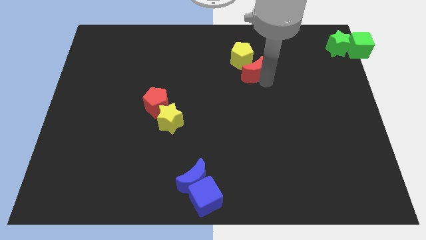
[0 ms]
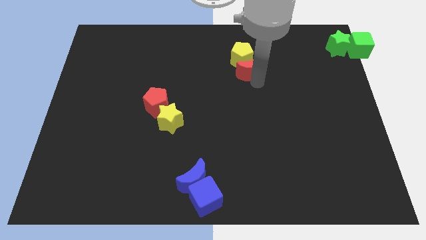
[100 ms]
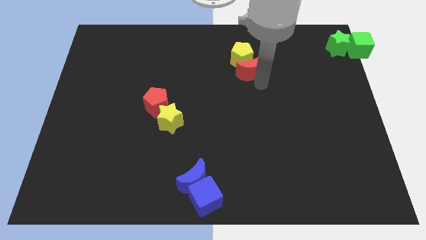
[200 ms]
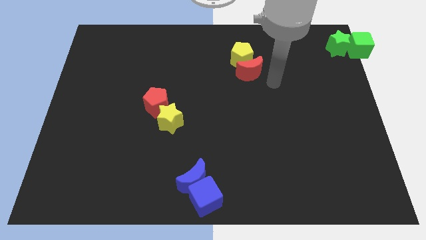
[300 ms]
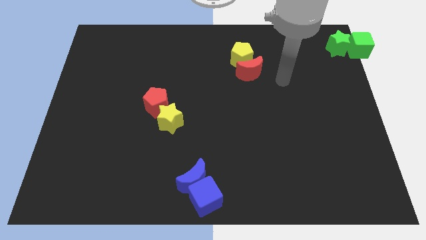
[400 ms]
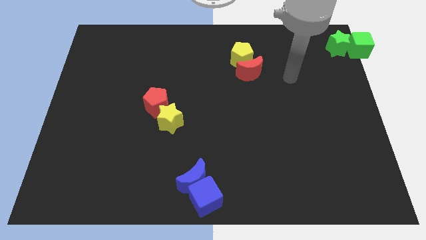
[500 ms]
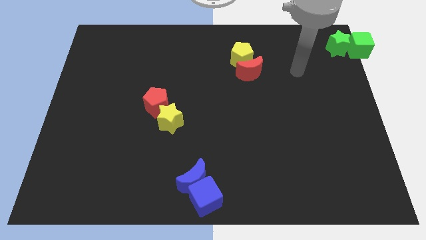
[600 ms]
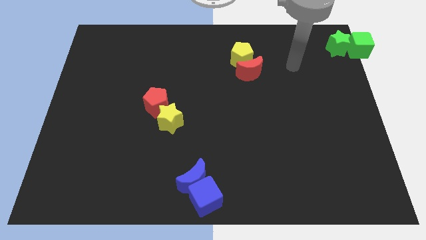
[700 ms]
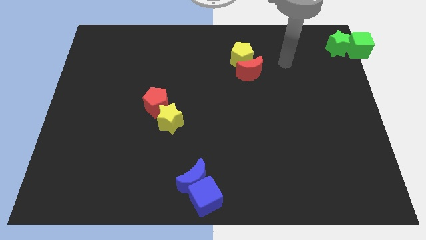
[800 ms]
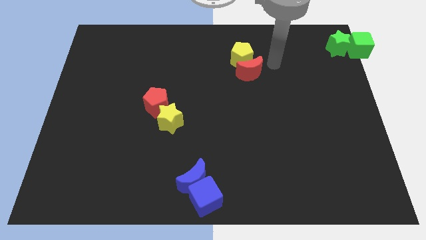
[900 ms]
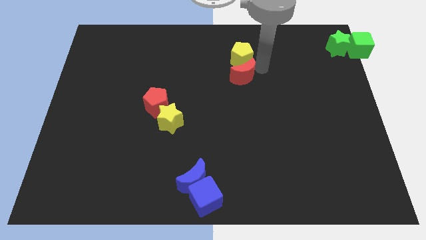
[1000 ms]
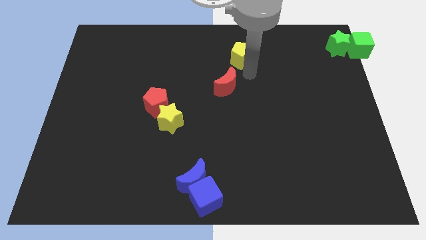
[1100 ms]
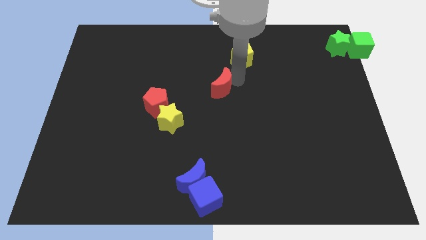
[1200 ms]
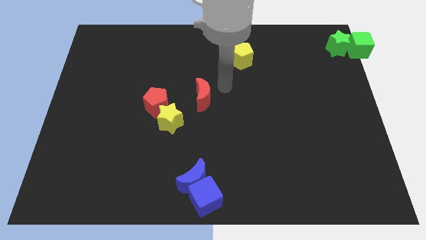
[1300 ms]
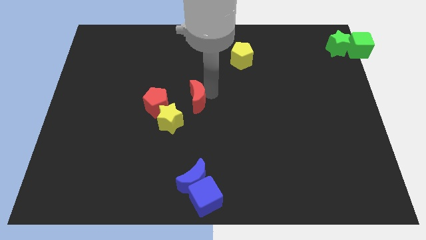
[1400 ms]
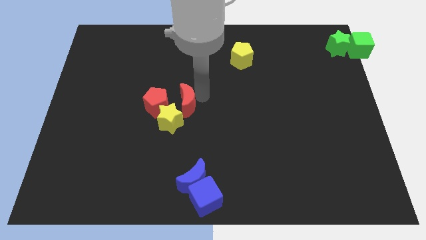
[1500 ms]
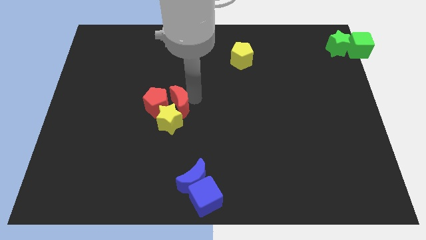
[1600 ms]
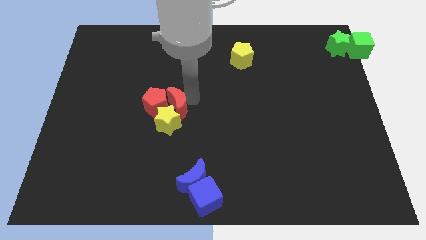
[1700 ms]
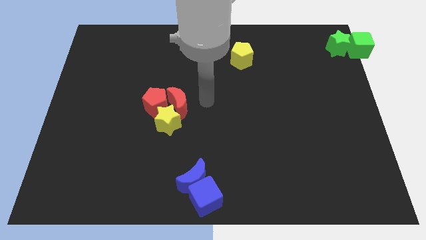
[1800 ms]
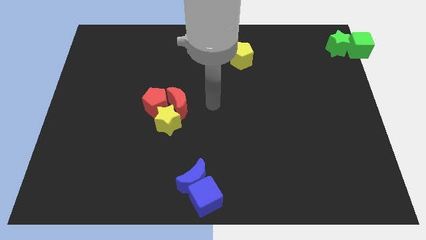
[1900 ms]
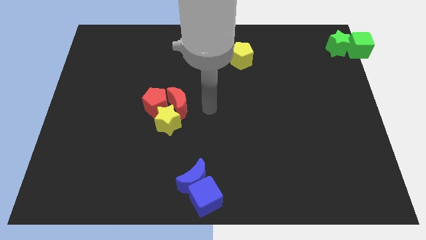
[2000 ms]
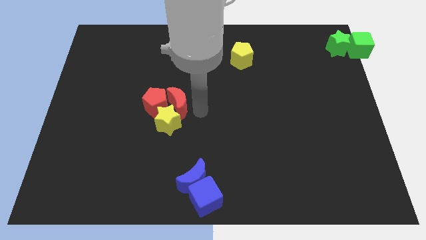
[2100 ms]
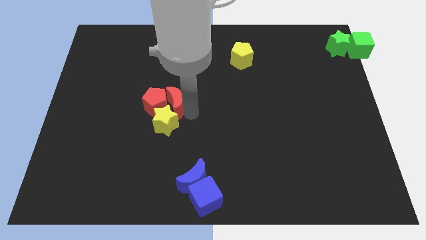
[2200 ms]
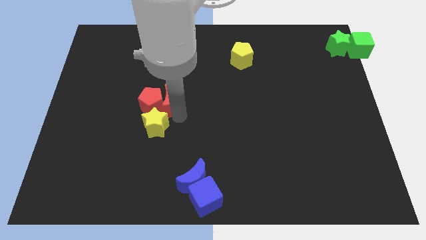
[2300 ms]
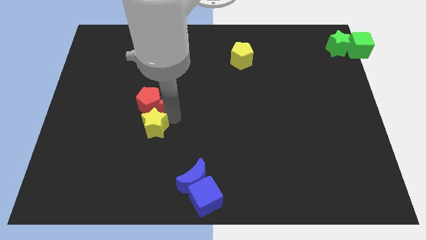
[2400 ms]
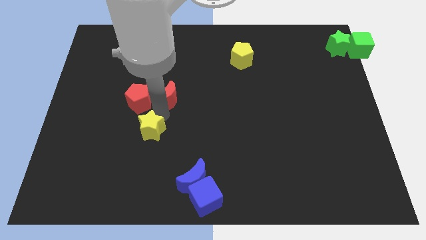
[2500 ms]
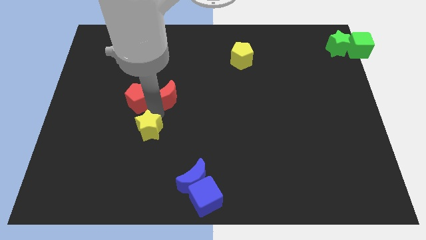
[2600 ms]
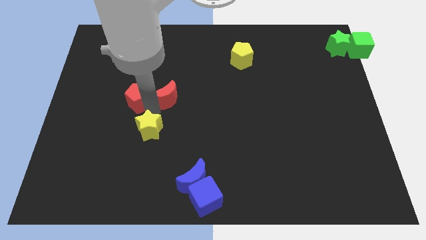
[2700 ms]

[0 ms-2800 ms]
push the red moon into the red pentagon and yellow star

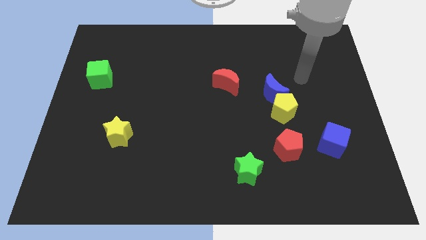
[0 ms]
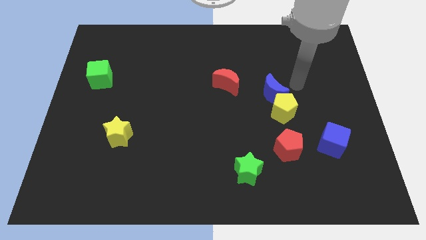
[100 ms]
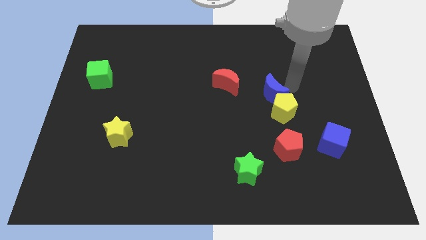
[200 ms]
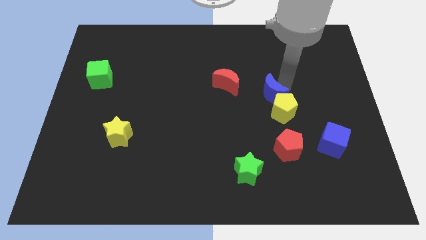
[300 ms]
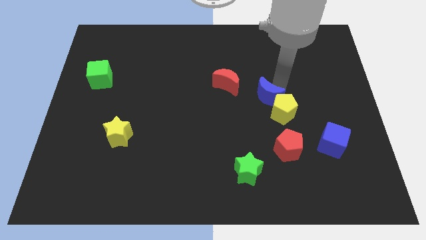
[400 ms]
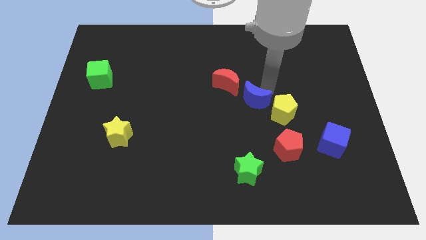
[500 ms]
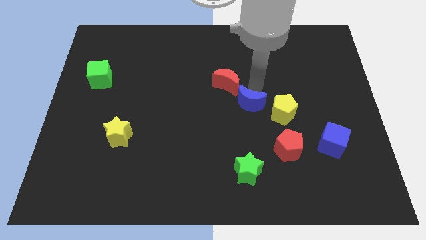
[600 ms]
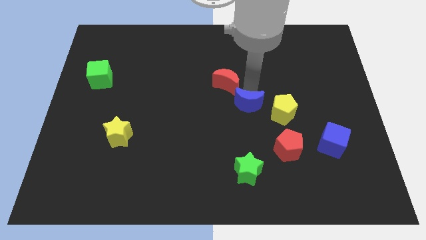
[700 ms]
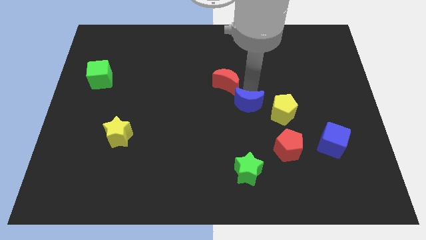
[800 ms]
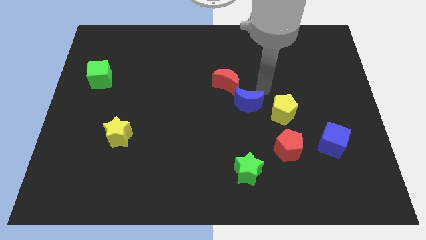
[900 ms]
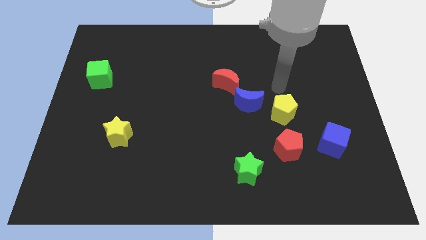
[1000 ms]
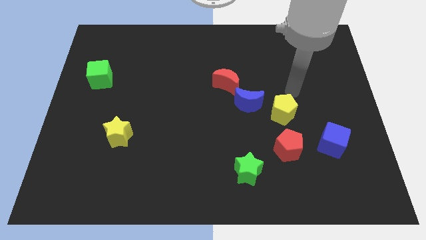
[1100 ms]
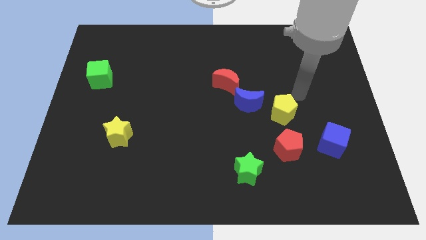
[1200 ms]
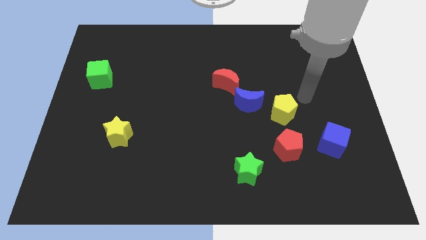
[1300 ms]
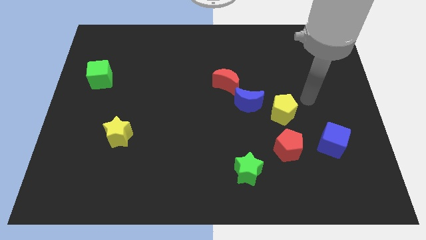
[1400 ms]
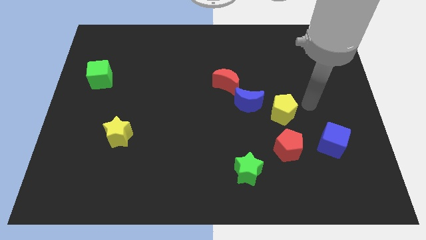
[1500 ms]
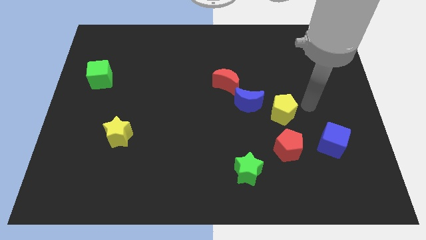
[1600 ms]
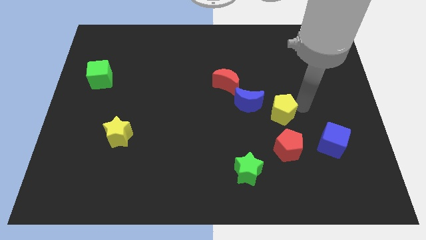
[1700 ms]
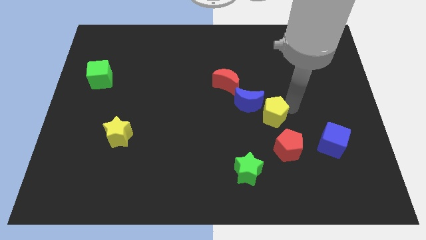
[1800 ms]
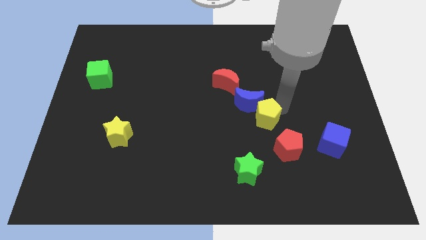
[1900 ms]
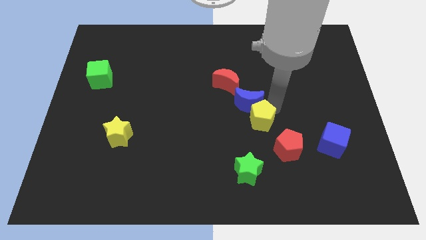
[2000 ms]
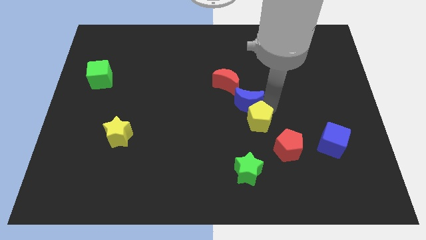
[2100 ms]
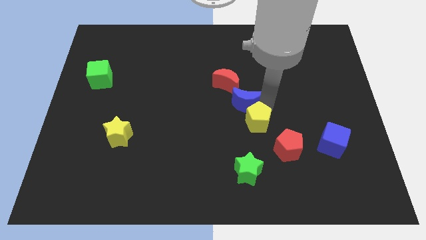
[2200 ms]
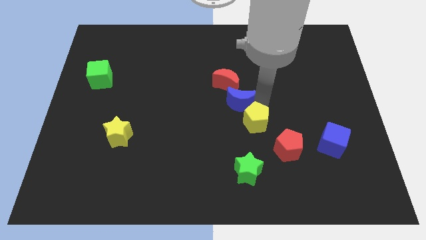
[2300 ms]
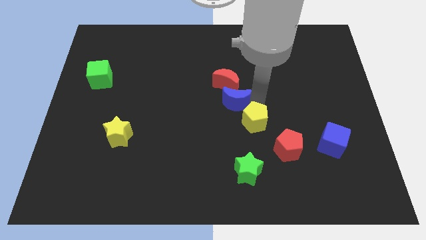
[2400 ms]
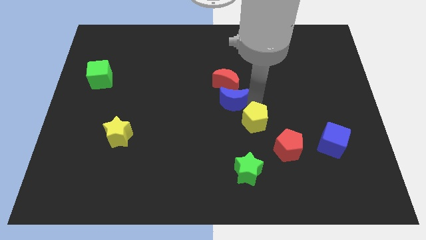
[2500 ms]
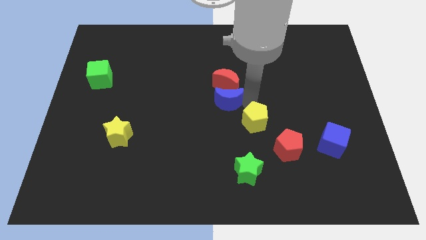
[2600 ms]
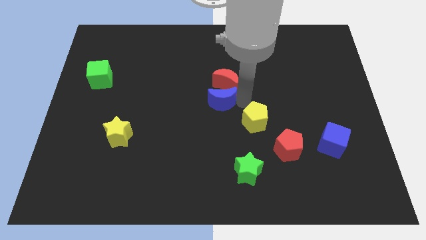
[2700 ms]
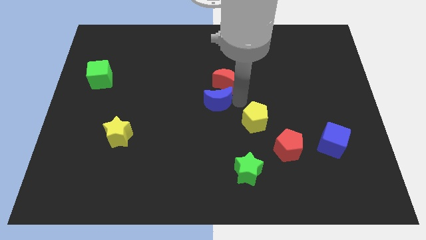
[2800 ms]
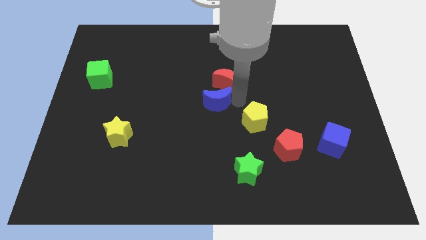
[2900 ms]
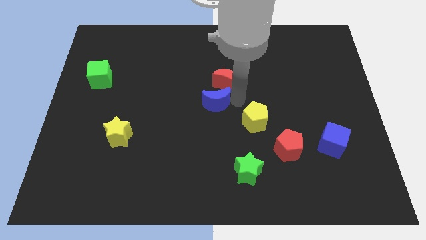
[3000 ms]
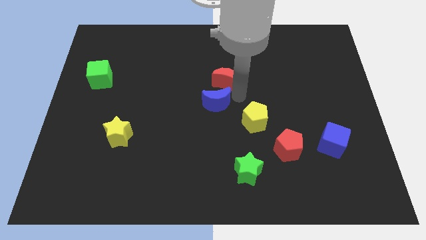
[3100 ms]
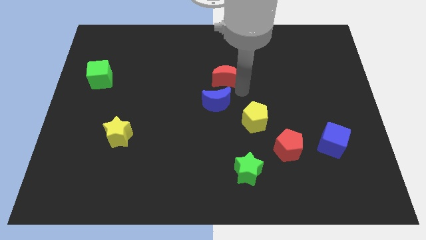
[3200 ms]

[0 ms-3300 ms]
move the blue moon down to the red moon

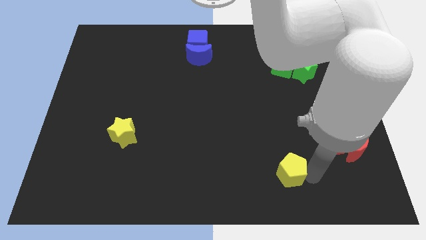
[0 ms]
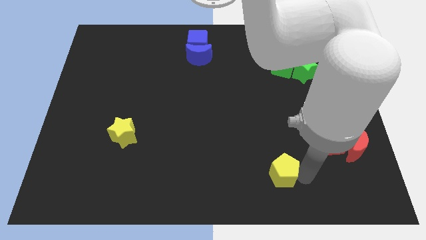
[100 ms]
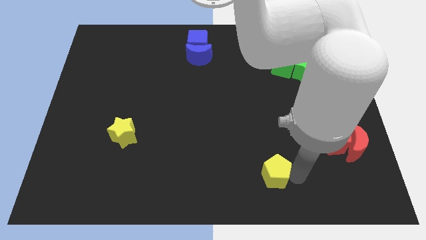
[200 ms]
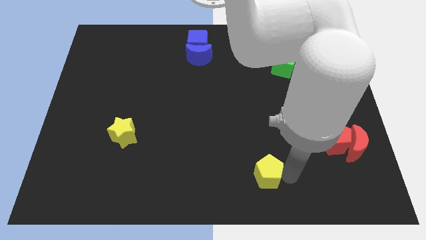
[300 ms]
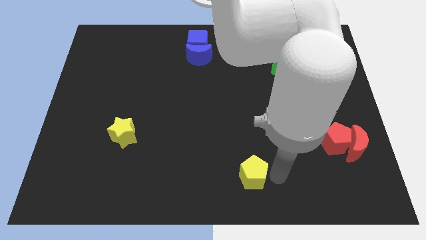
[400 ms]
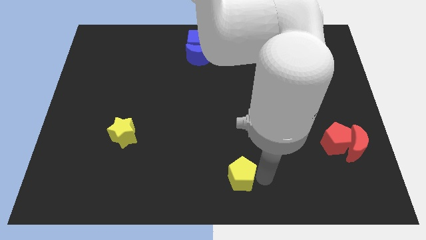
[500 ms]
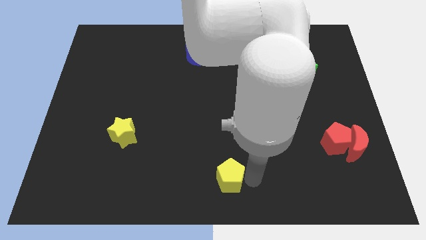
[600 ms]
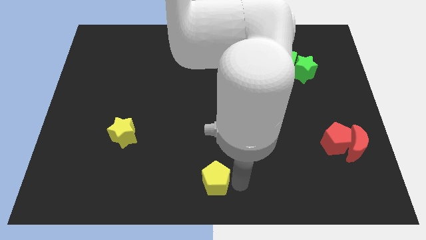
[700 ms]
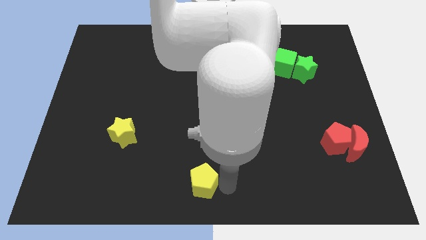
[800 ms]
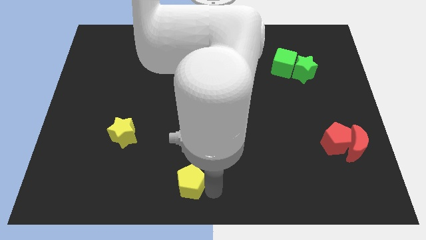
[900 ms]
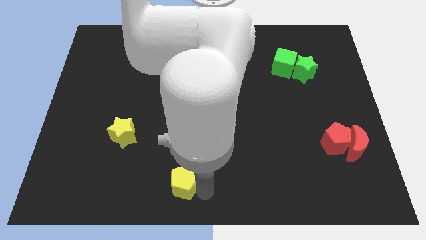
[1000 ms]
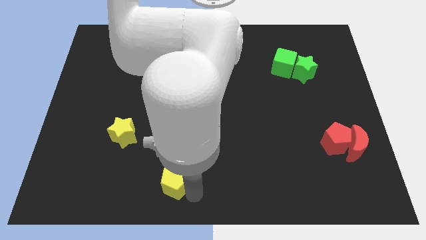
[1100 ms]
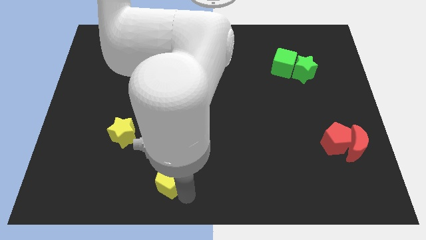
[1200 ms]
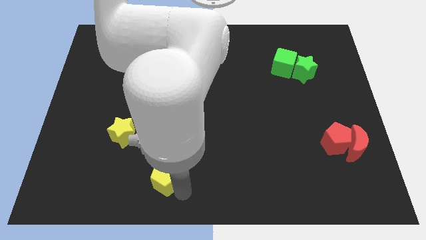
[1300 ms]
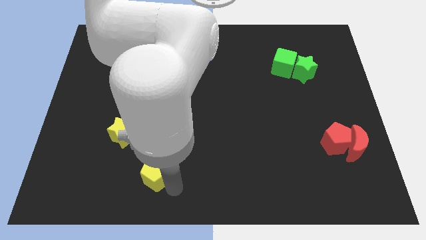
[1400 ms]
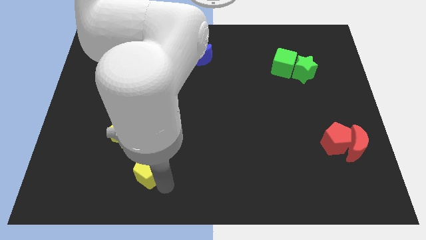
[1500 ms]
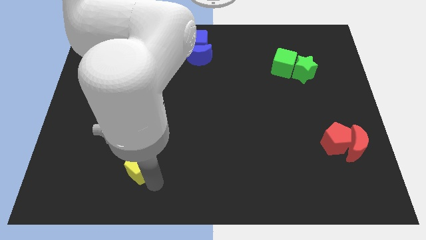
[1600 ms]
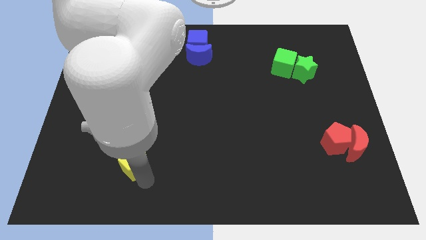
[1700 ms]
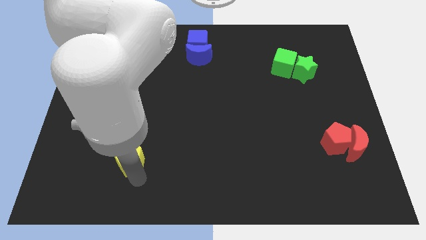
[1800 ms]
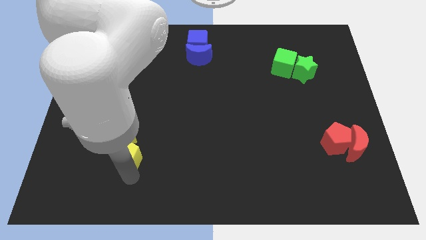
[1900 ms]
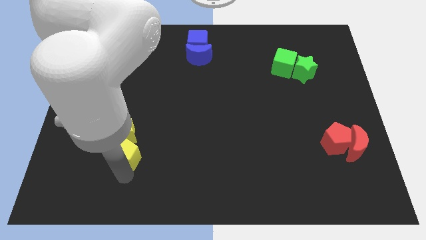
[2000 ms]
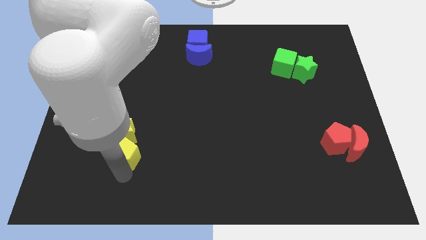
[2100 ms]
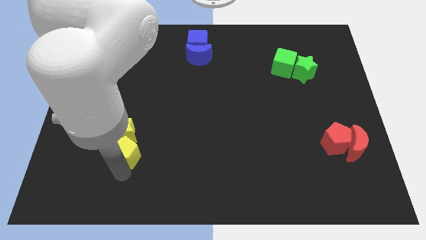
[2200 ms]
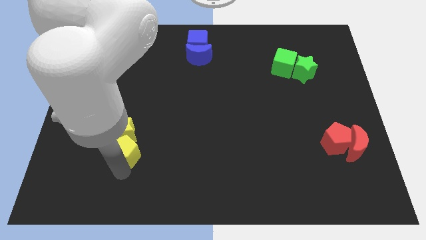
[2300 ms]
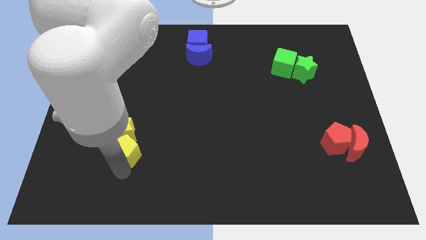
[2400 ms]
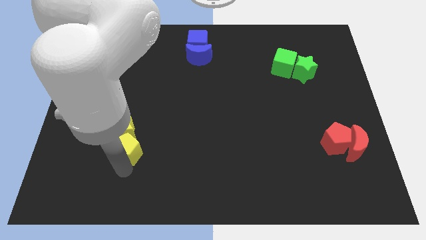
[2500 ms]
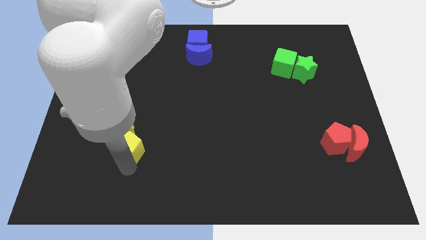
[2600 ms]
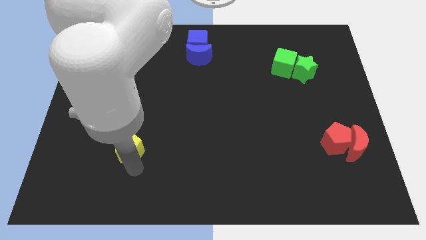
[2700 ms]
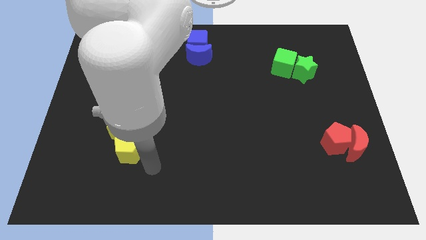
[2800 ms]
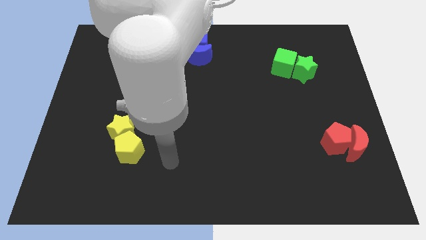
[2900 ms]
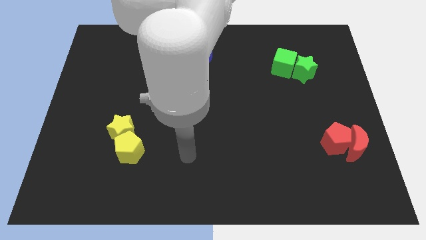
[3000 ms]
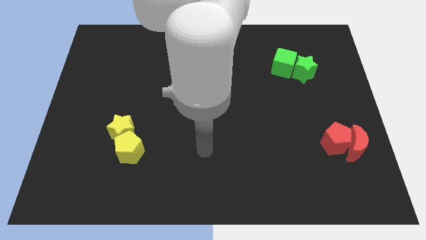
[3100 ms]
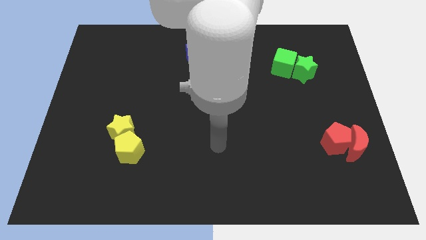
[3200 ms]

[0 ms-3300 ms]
push yellow pentagon in to yellow star
